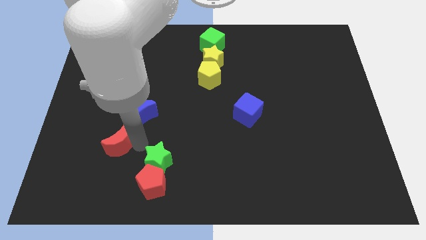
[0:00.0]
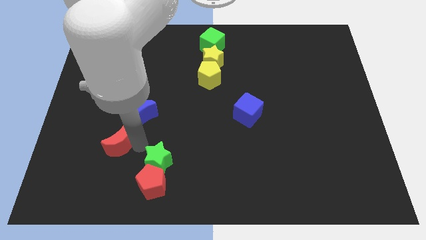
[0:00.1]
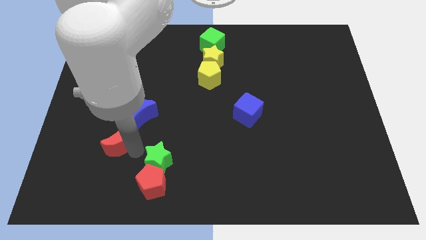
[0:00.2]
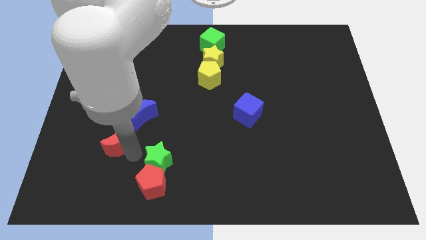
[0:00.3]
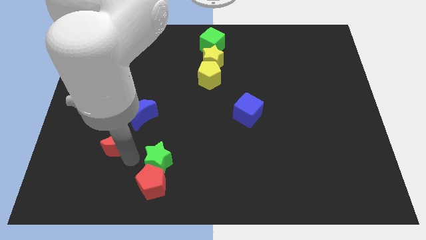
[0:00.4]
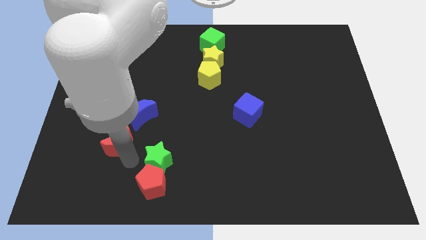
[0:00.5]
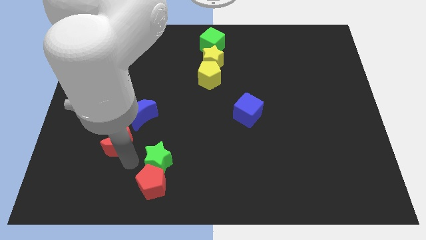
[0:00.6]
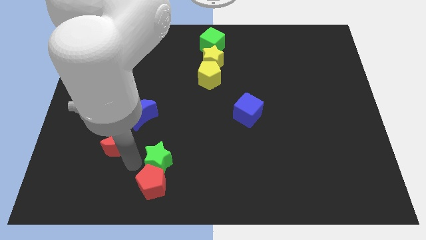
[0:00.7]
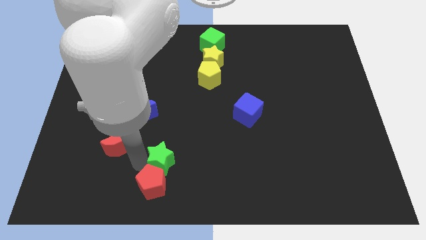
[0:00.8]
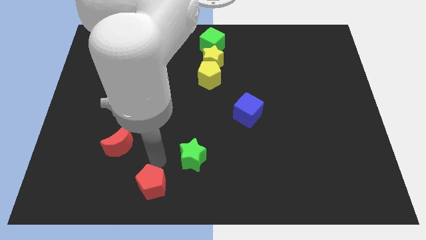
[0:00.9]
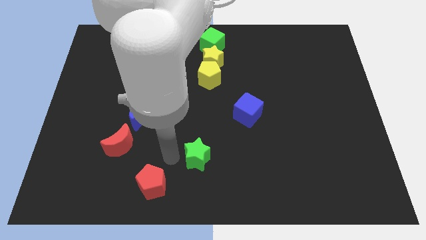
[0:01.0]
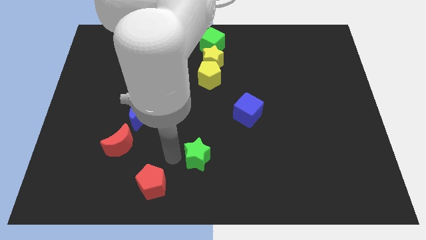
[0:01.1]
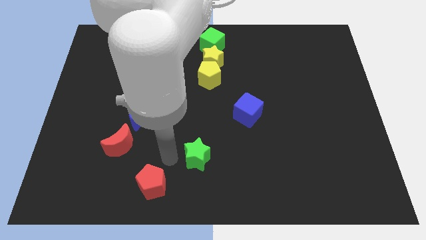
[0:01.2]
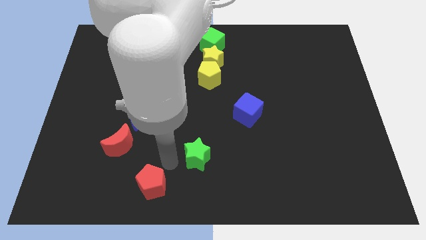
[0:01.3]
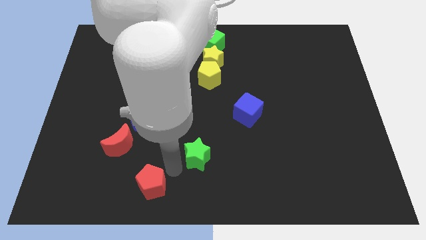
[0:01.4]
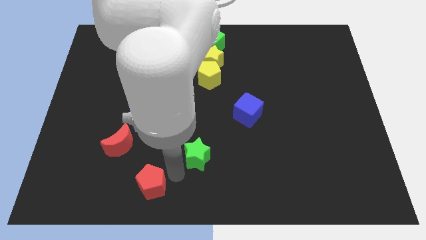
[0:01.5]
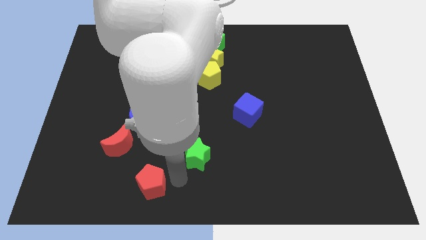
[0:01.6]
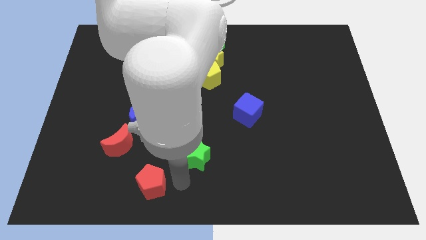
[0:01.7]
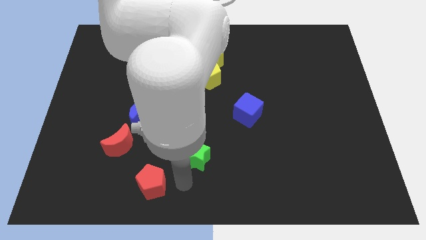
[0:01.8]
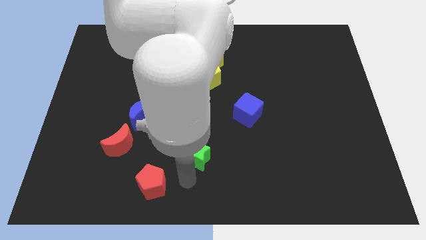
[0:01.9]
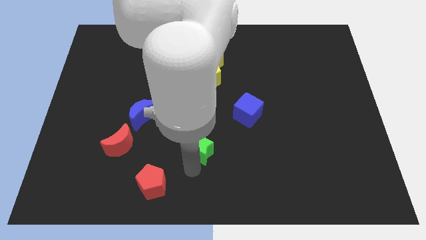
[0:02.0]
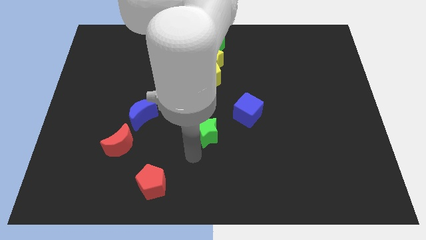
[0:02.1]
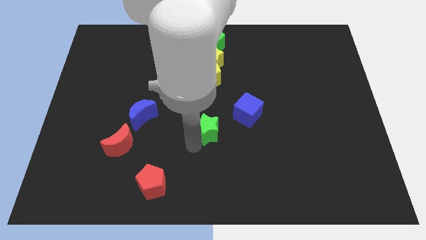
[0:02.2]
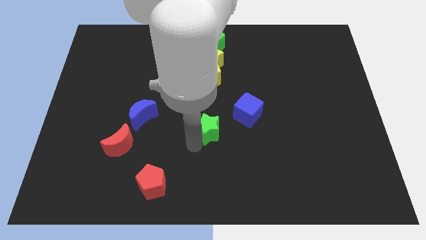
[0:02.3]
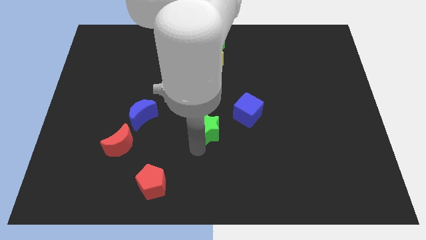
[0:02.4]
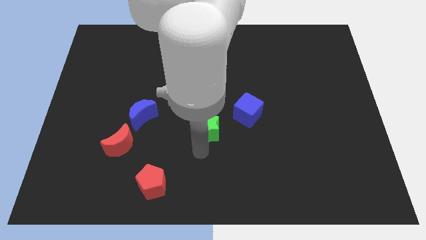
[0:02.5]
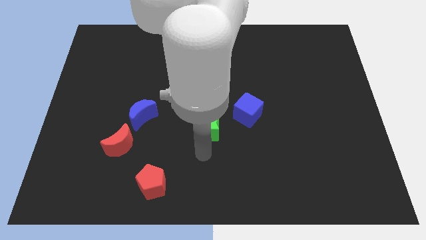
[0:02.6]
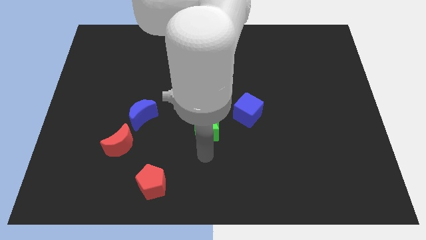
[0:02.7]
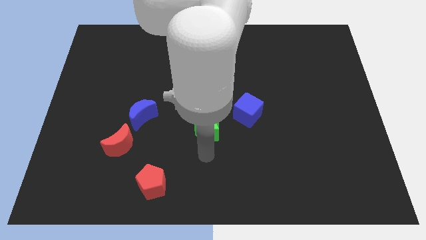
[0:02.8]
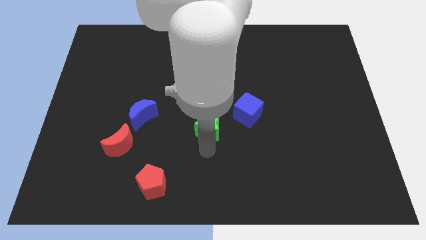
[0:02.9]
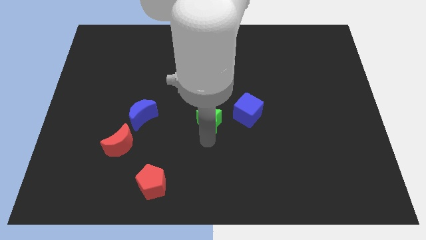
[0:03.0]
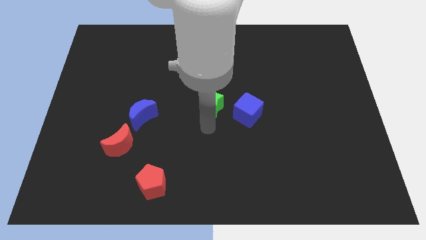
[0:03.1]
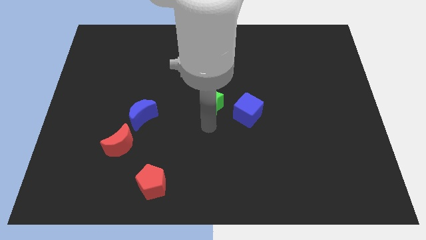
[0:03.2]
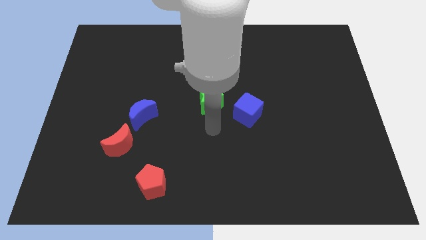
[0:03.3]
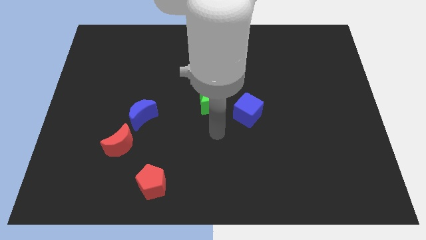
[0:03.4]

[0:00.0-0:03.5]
push green star away from the red pentagon

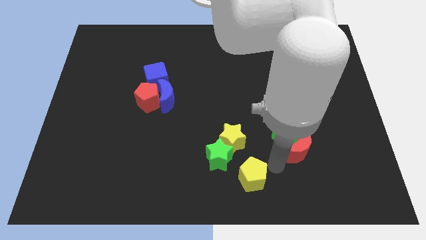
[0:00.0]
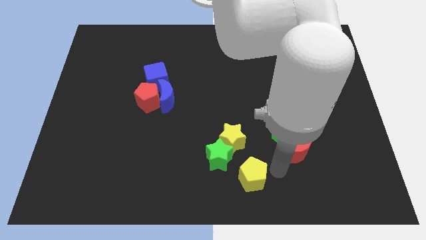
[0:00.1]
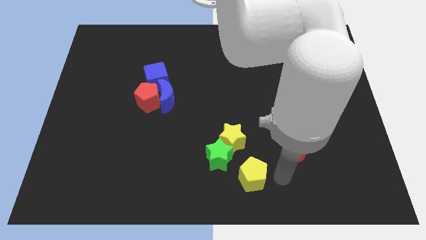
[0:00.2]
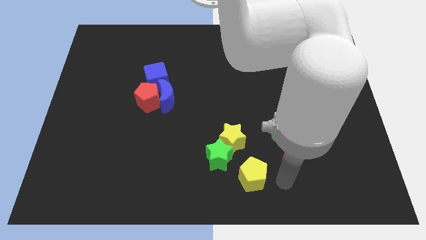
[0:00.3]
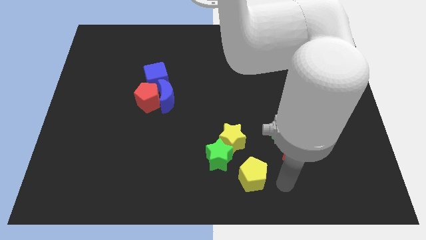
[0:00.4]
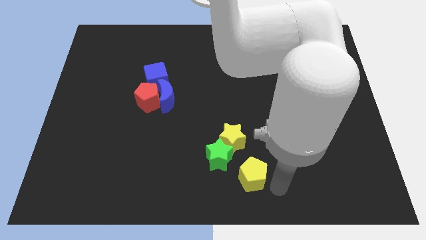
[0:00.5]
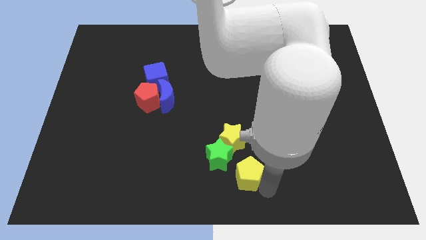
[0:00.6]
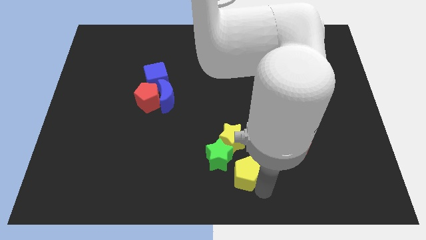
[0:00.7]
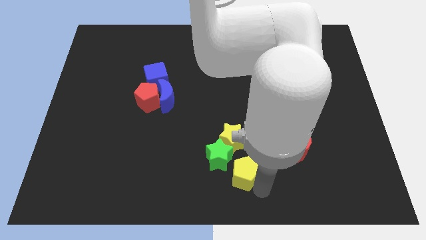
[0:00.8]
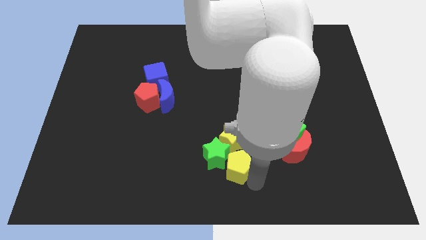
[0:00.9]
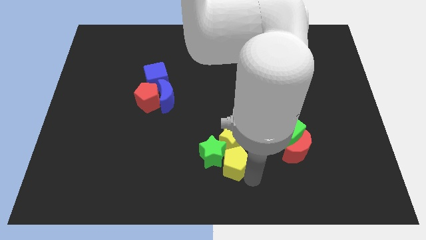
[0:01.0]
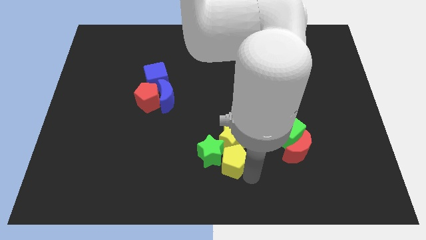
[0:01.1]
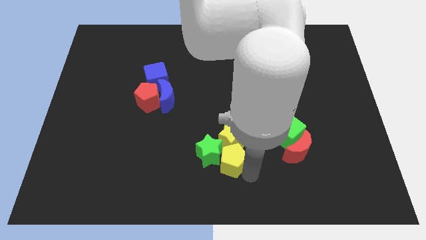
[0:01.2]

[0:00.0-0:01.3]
push the yellow pentagon into the green star

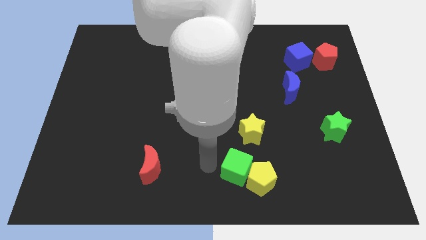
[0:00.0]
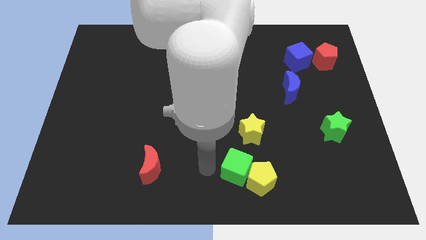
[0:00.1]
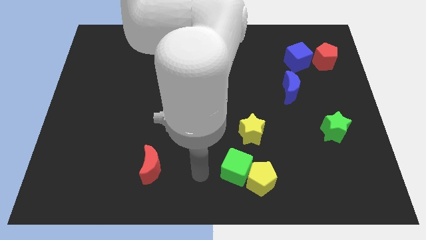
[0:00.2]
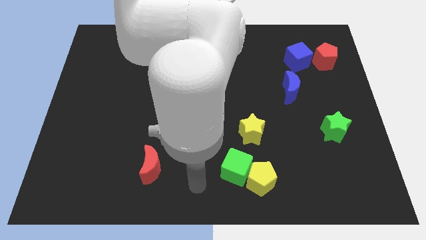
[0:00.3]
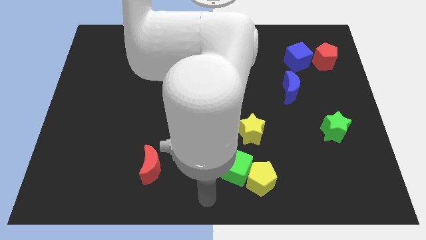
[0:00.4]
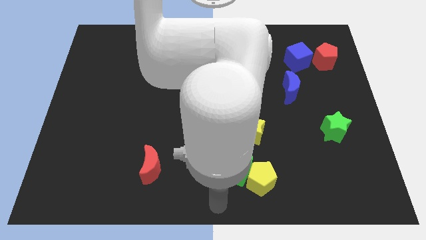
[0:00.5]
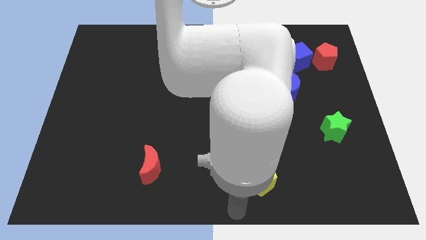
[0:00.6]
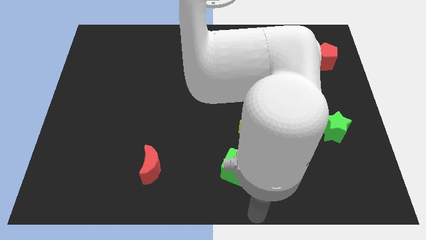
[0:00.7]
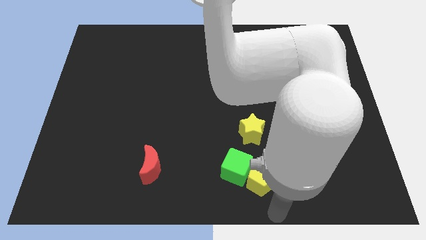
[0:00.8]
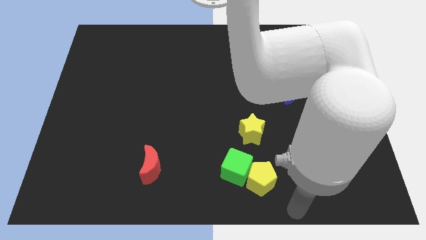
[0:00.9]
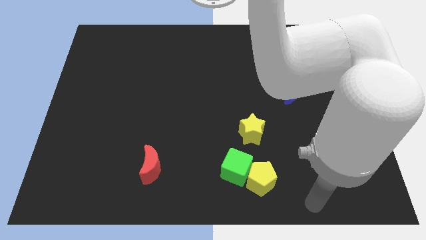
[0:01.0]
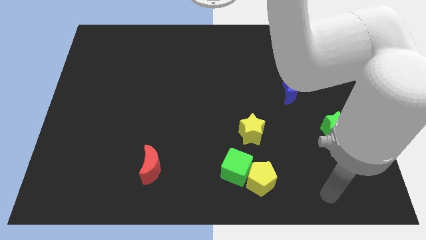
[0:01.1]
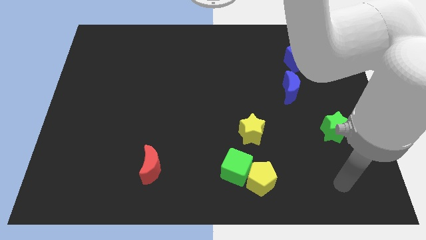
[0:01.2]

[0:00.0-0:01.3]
move your arm towards the bottom right

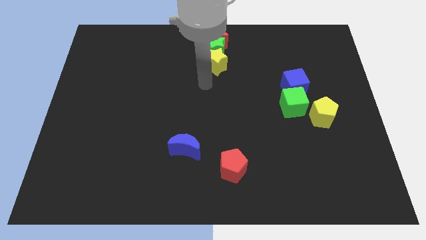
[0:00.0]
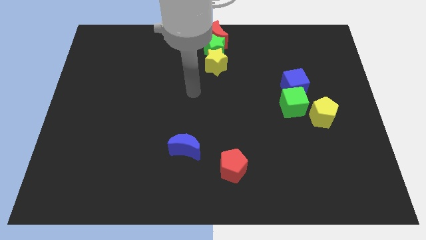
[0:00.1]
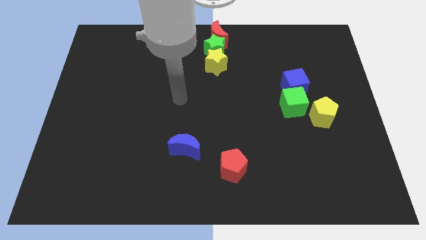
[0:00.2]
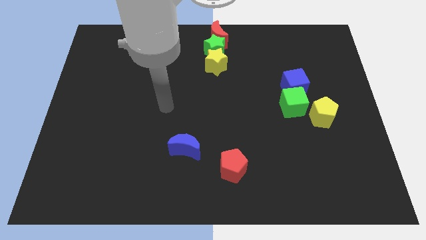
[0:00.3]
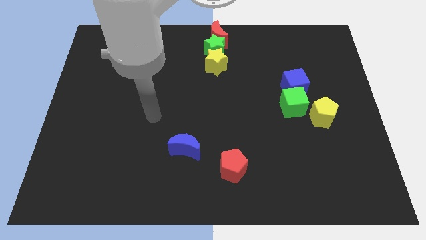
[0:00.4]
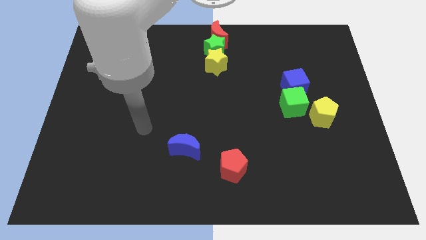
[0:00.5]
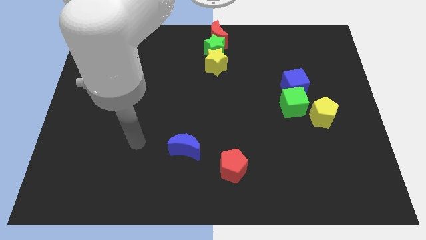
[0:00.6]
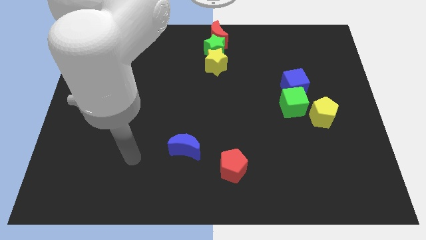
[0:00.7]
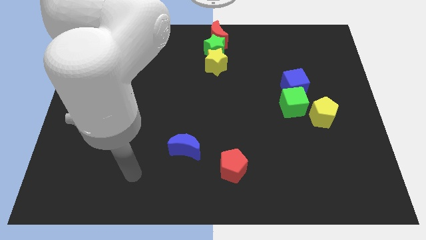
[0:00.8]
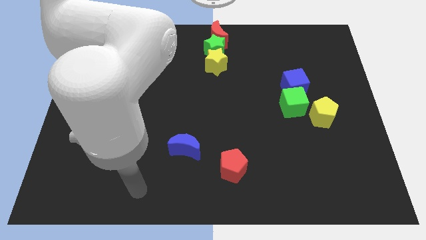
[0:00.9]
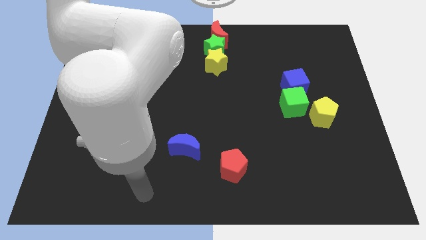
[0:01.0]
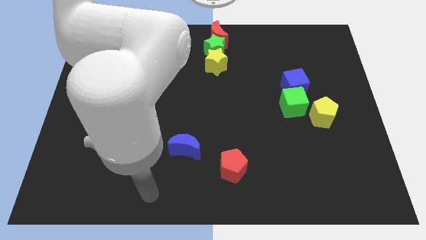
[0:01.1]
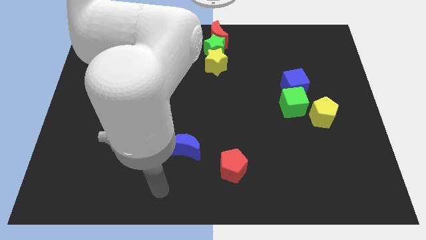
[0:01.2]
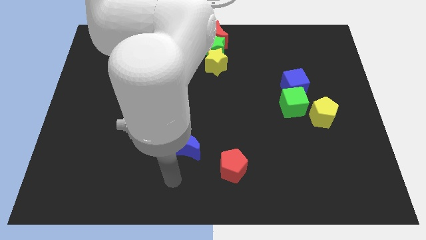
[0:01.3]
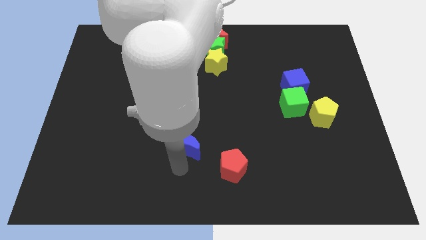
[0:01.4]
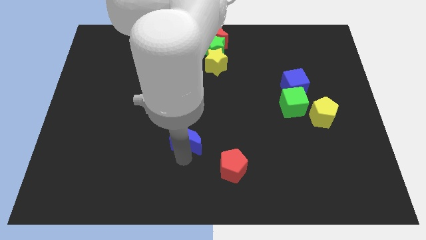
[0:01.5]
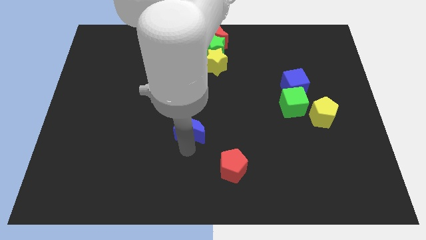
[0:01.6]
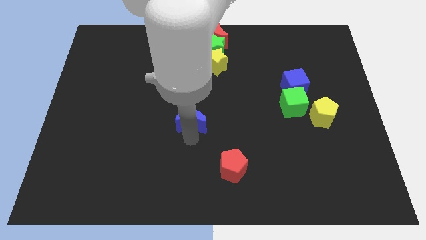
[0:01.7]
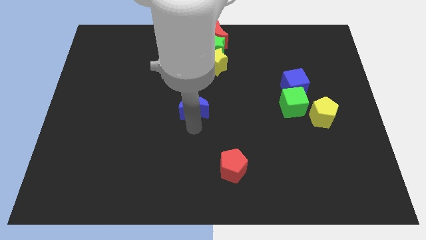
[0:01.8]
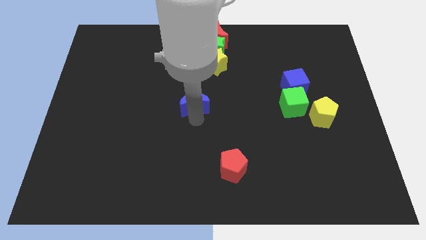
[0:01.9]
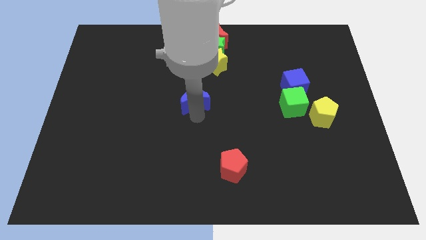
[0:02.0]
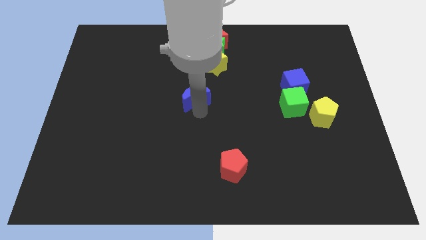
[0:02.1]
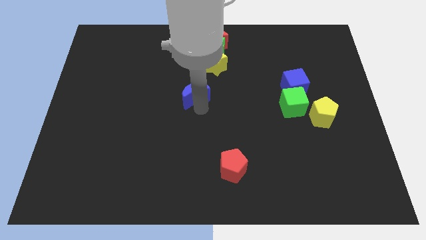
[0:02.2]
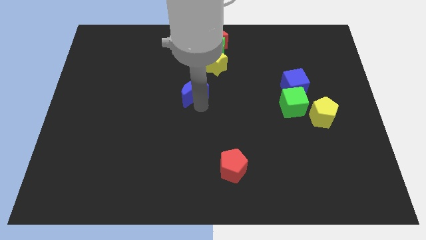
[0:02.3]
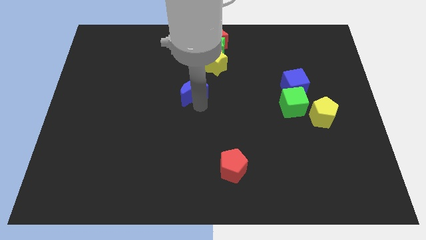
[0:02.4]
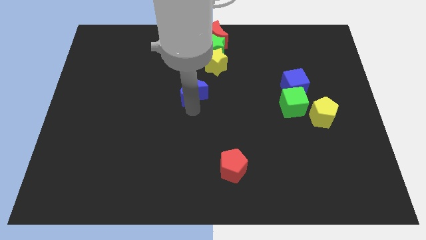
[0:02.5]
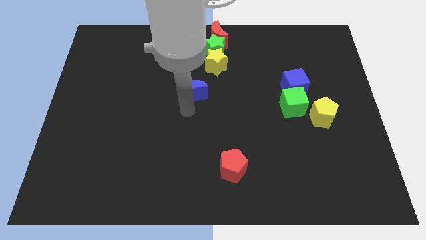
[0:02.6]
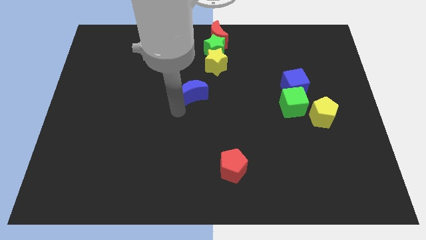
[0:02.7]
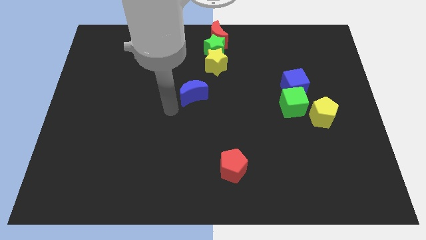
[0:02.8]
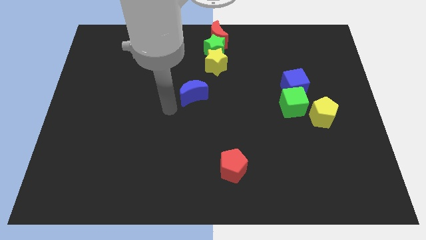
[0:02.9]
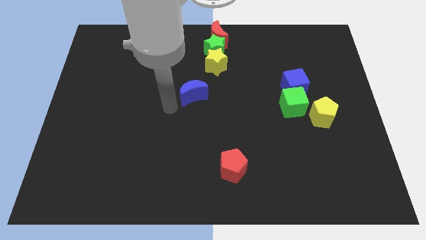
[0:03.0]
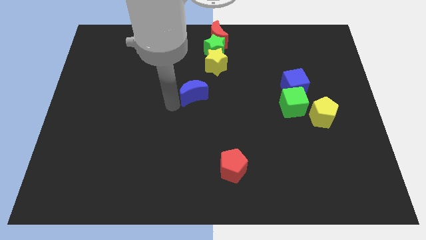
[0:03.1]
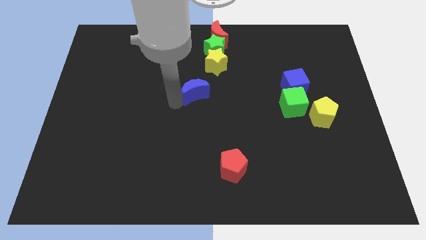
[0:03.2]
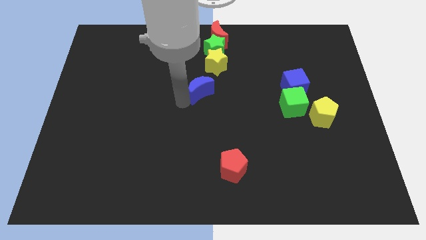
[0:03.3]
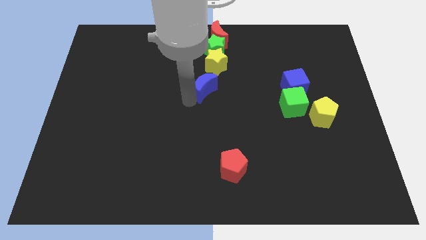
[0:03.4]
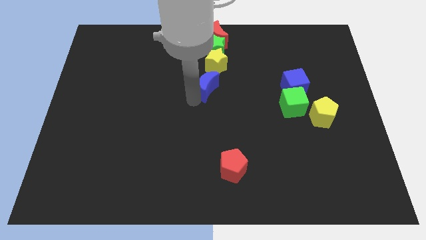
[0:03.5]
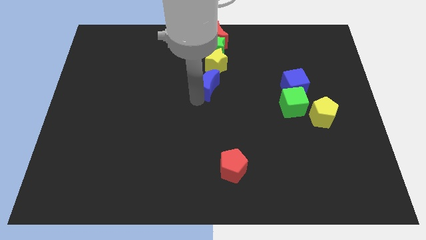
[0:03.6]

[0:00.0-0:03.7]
slide the blue moon close to the yellow star
